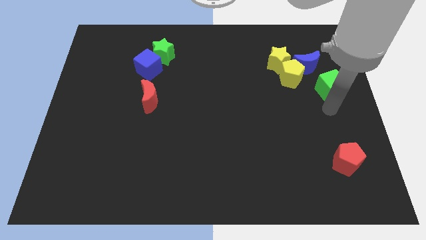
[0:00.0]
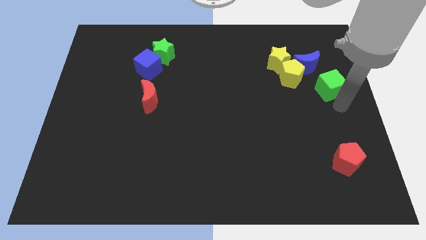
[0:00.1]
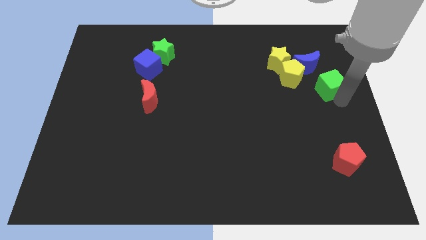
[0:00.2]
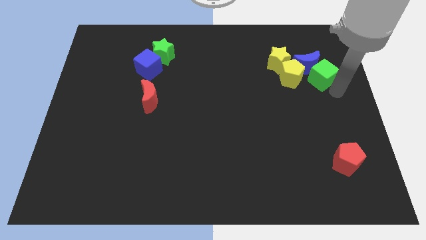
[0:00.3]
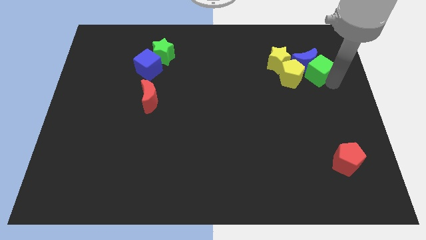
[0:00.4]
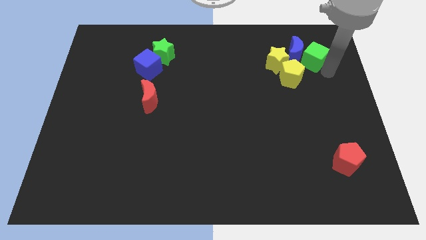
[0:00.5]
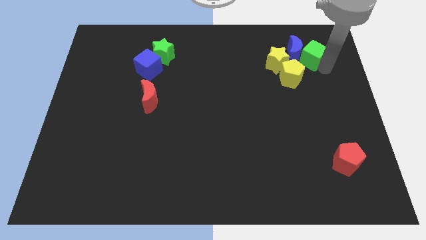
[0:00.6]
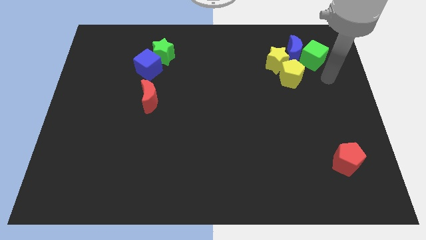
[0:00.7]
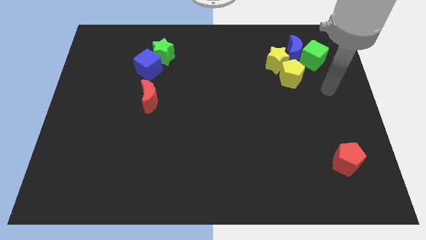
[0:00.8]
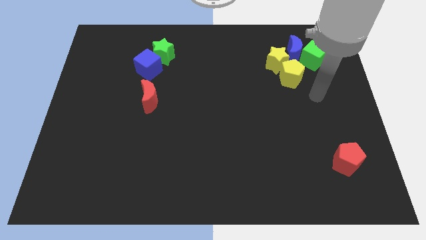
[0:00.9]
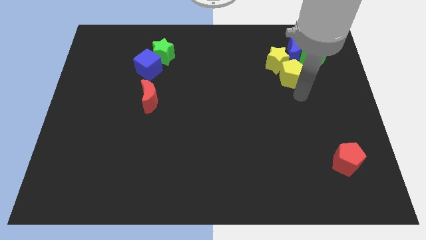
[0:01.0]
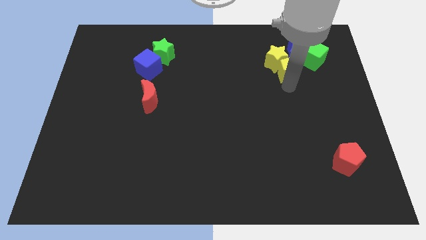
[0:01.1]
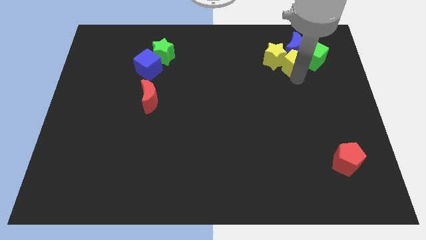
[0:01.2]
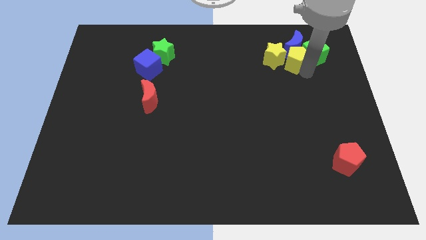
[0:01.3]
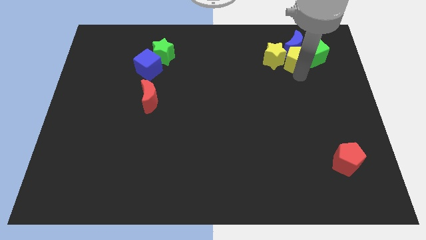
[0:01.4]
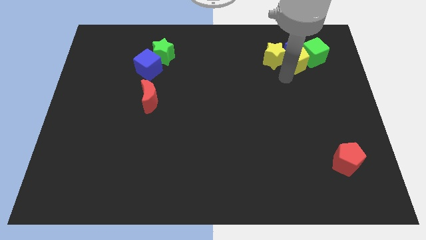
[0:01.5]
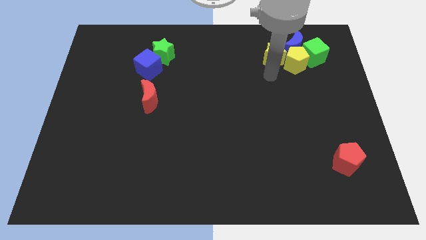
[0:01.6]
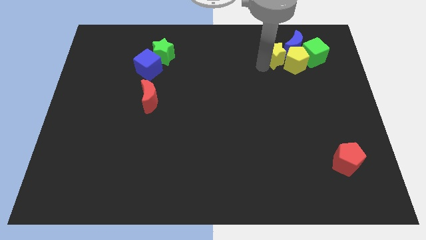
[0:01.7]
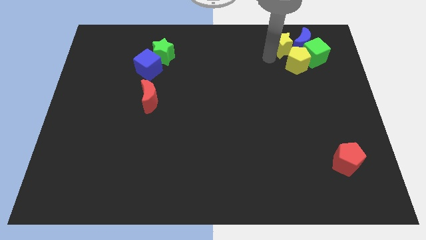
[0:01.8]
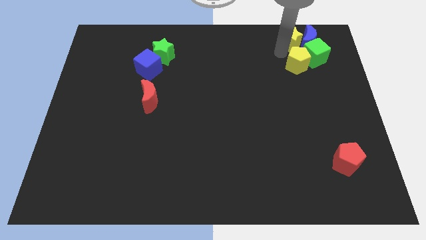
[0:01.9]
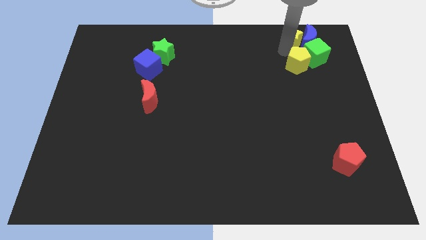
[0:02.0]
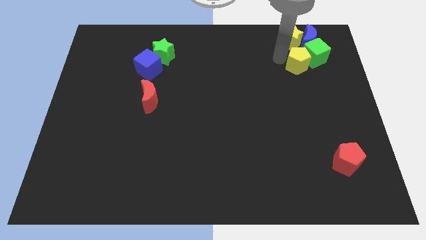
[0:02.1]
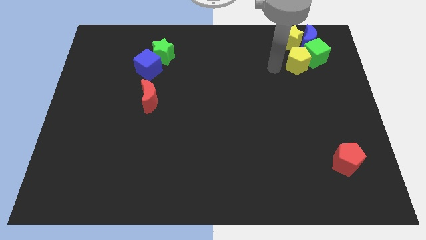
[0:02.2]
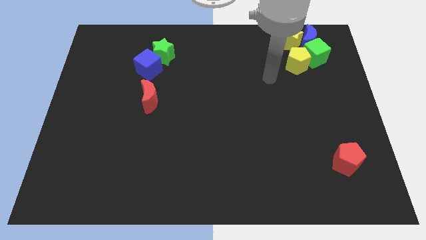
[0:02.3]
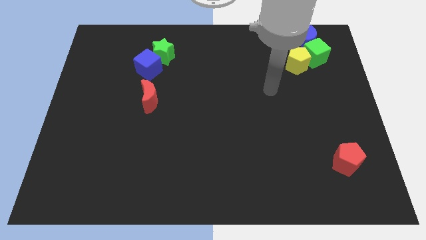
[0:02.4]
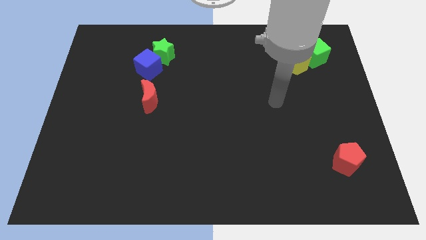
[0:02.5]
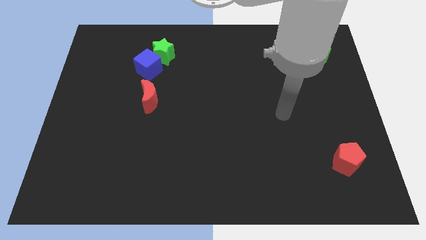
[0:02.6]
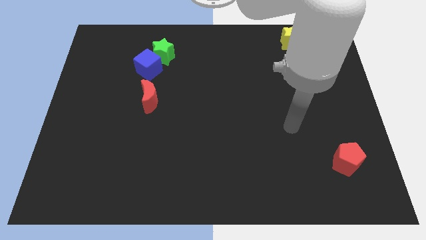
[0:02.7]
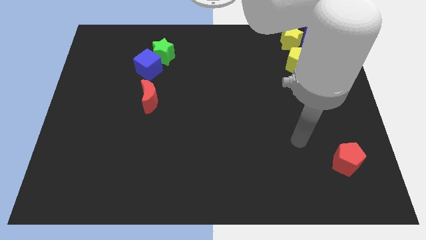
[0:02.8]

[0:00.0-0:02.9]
push the yellow star into the blue crescent

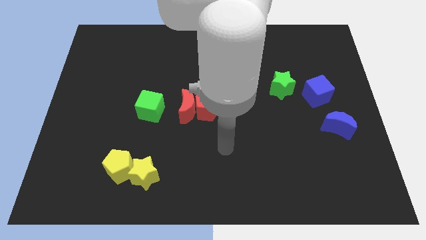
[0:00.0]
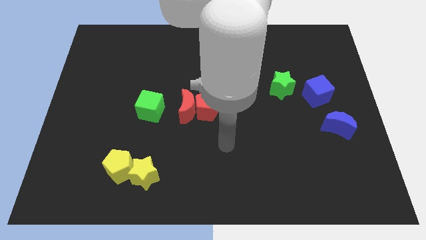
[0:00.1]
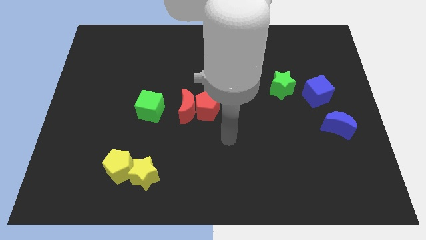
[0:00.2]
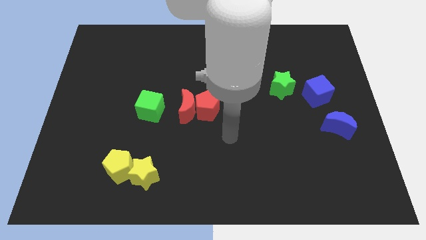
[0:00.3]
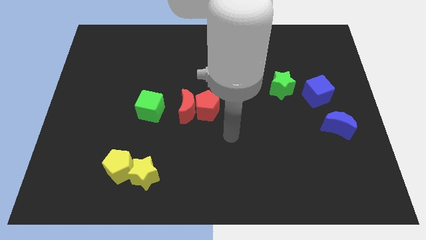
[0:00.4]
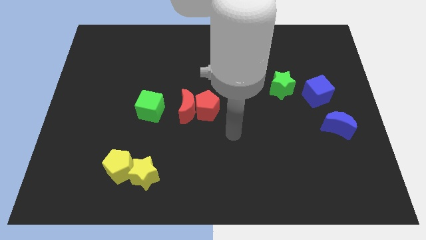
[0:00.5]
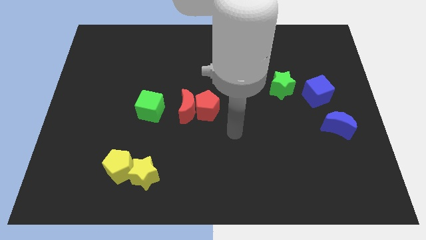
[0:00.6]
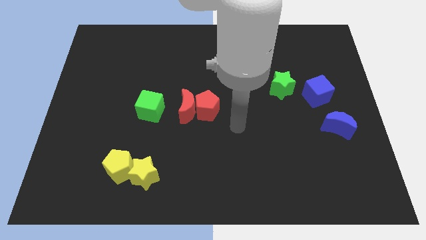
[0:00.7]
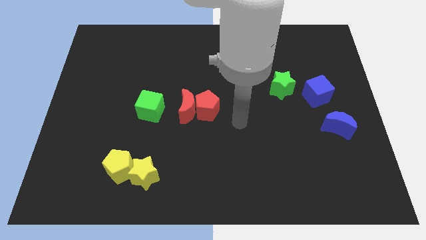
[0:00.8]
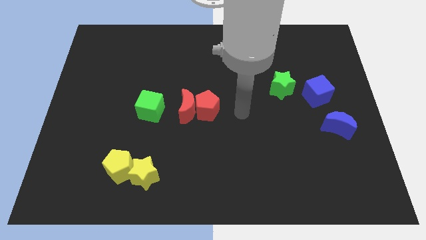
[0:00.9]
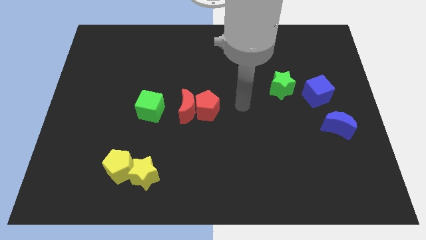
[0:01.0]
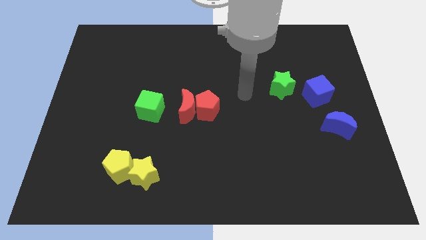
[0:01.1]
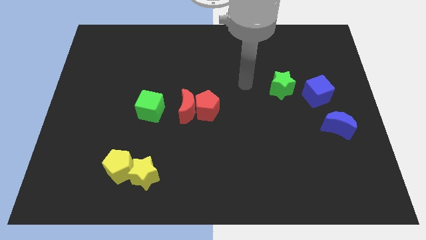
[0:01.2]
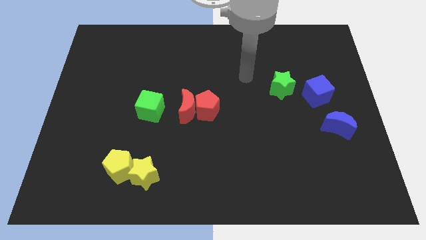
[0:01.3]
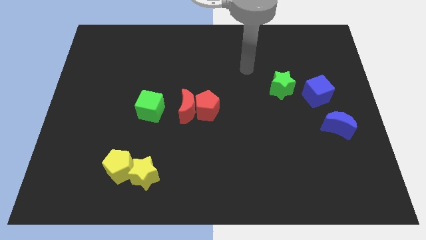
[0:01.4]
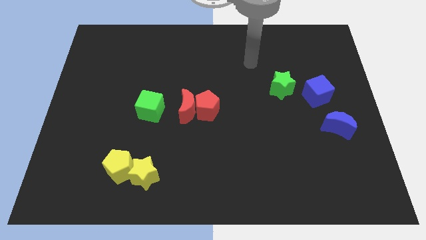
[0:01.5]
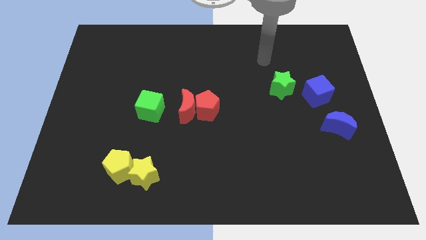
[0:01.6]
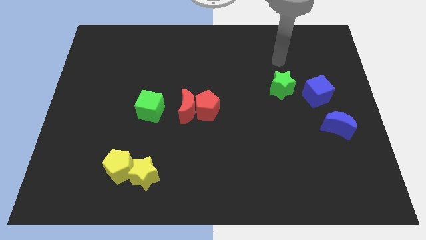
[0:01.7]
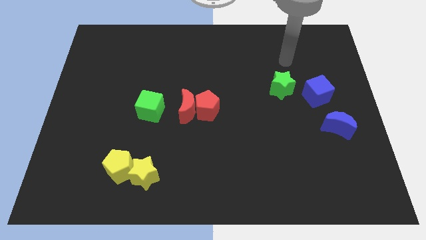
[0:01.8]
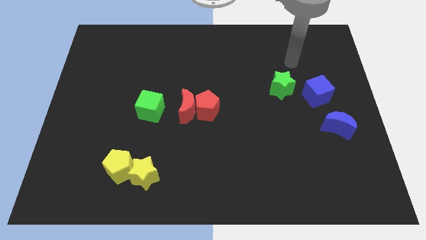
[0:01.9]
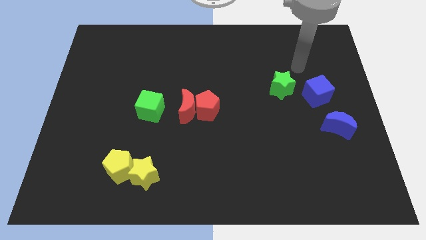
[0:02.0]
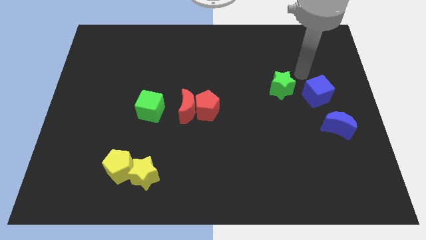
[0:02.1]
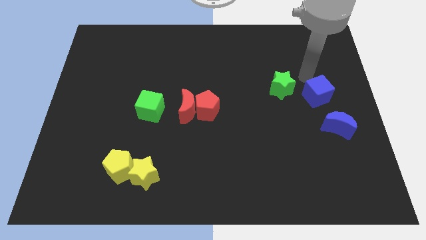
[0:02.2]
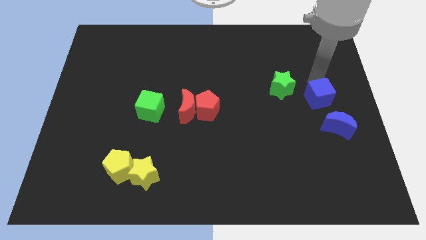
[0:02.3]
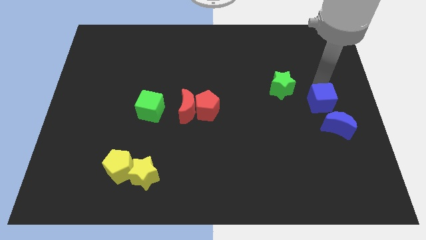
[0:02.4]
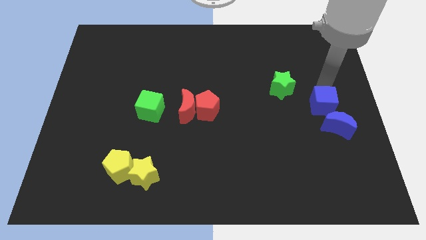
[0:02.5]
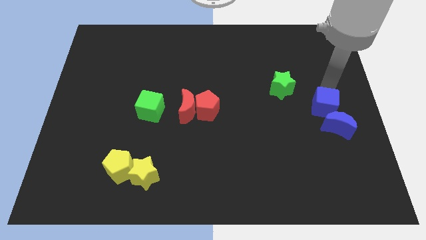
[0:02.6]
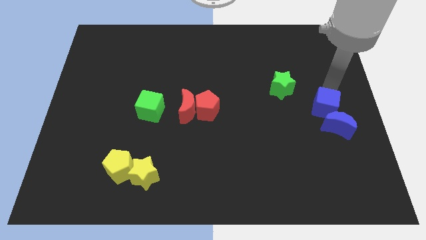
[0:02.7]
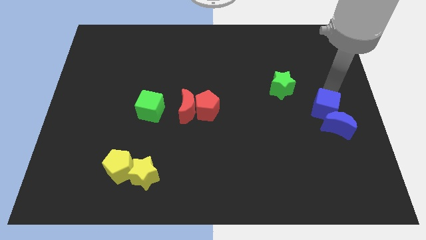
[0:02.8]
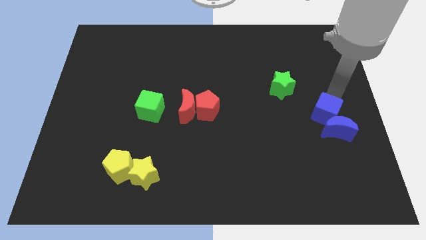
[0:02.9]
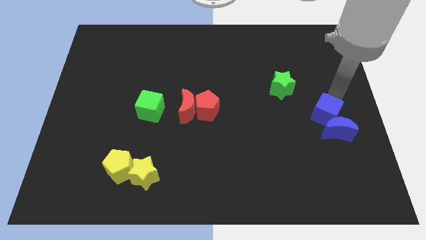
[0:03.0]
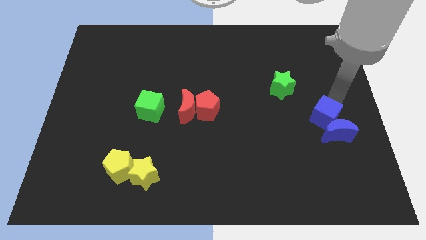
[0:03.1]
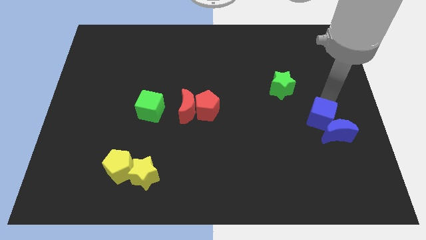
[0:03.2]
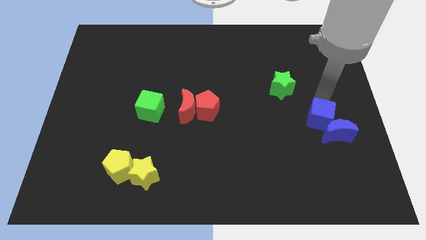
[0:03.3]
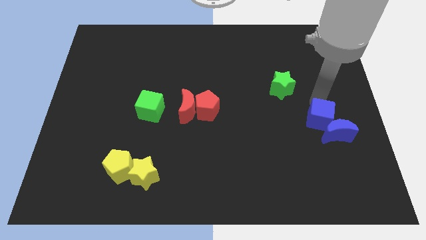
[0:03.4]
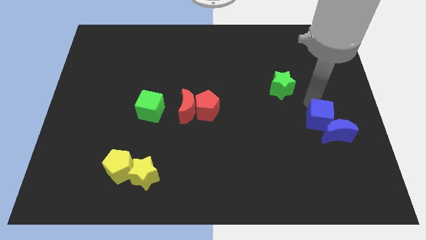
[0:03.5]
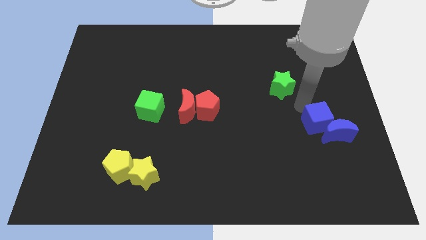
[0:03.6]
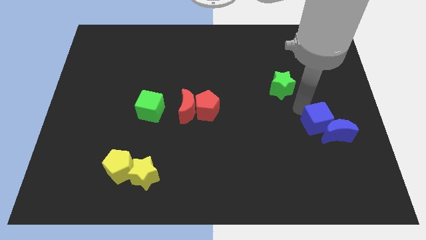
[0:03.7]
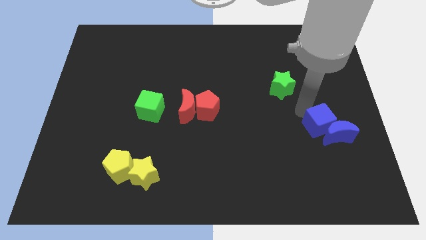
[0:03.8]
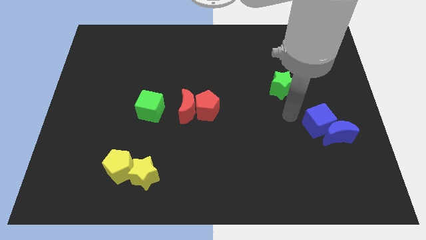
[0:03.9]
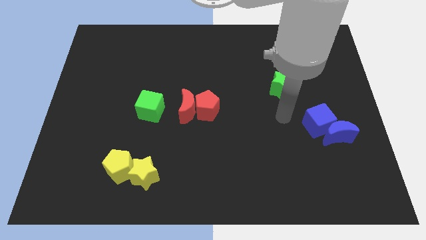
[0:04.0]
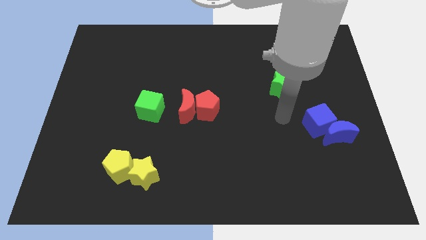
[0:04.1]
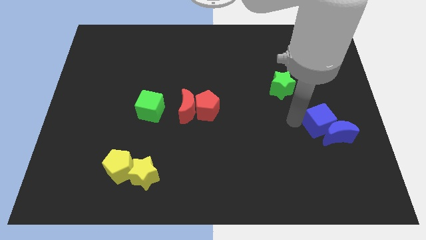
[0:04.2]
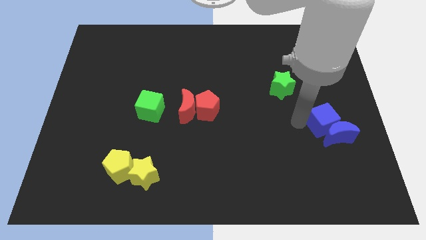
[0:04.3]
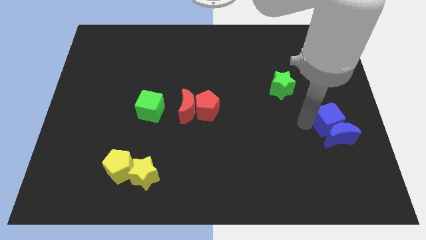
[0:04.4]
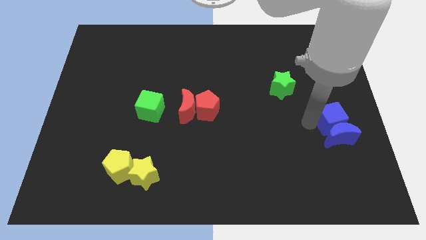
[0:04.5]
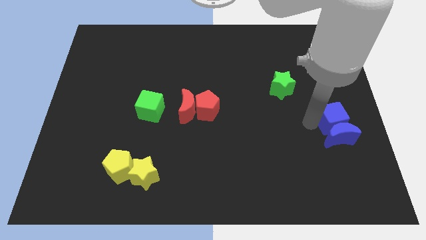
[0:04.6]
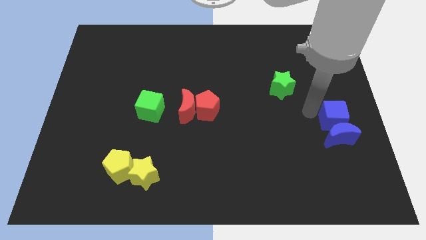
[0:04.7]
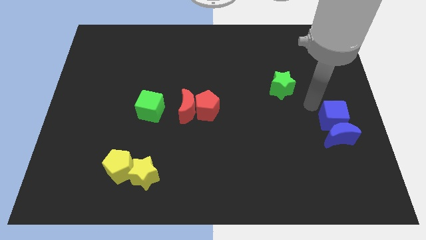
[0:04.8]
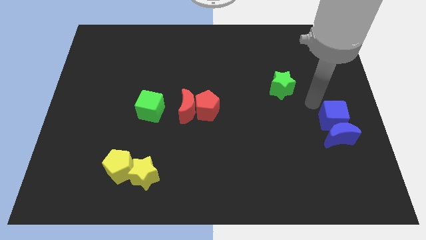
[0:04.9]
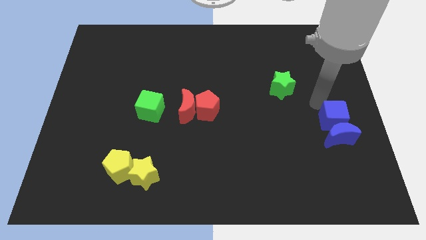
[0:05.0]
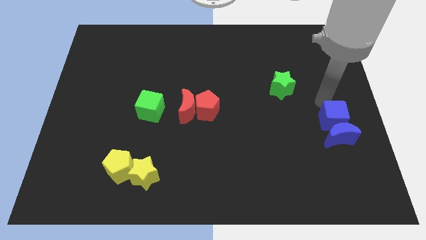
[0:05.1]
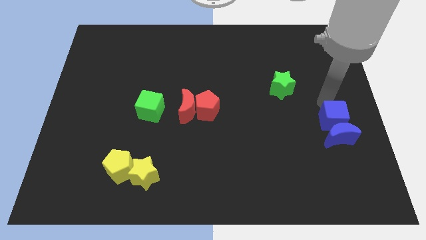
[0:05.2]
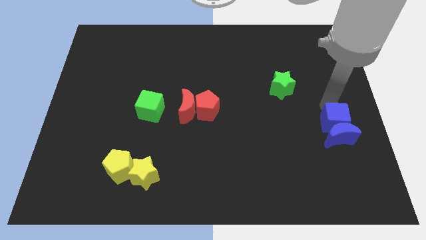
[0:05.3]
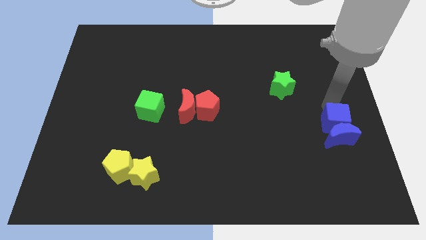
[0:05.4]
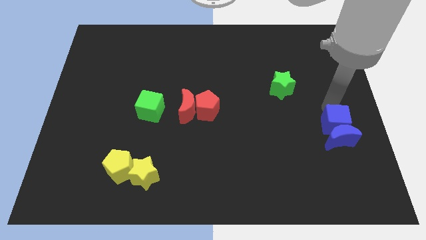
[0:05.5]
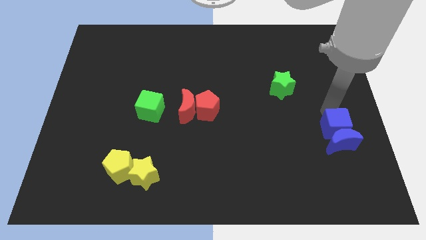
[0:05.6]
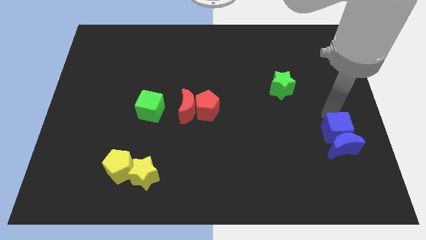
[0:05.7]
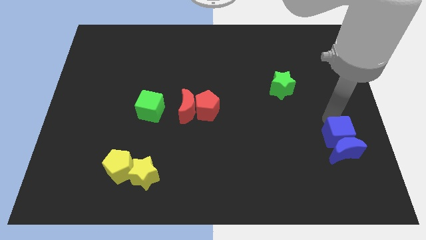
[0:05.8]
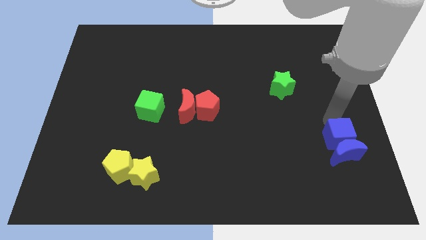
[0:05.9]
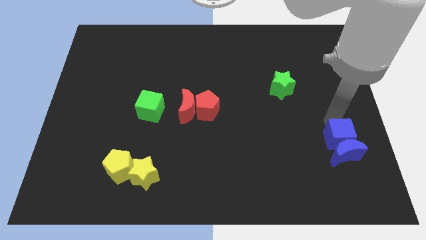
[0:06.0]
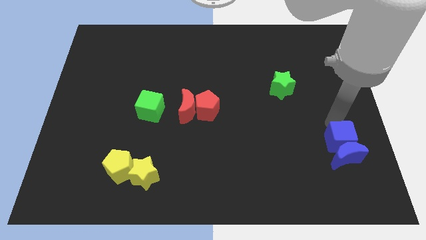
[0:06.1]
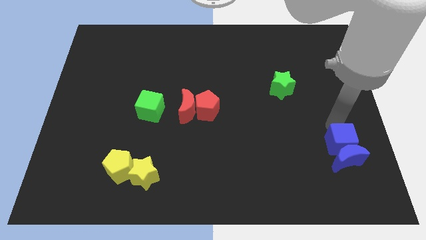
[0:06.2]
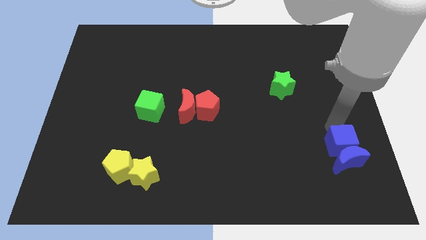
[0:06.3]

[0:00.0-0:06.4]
push the blue moon with the blue cube towards the bottom side of the board
